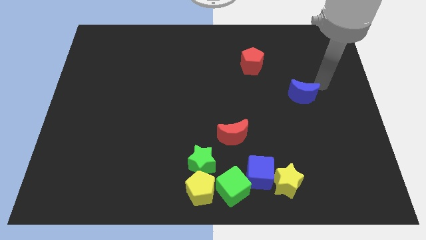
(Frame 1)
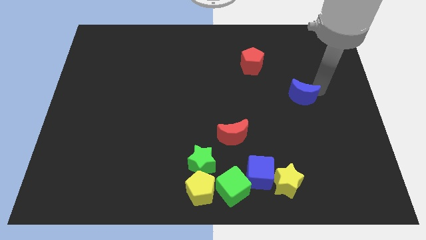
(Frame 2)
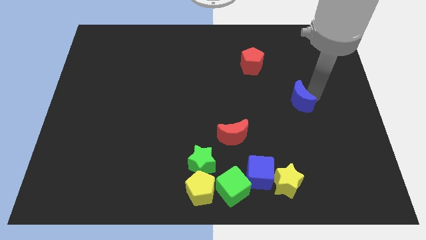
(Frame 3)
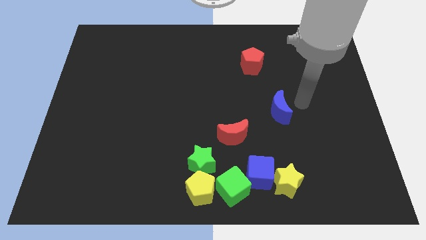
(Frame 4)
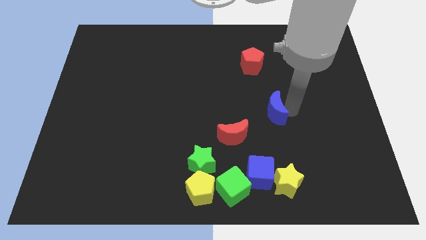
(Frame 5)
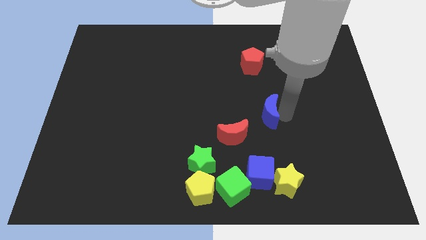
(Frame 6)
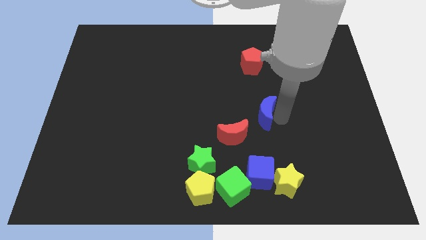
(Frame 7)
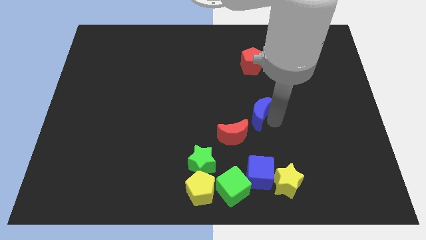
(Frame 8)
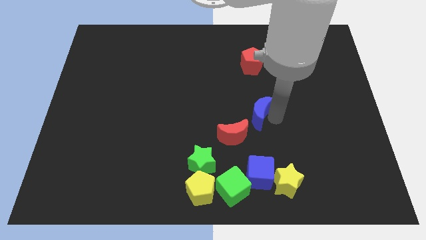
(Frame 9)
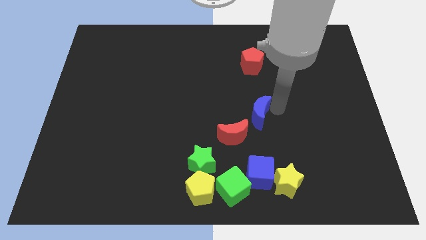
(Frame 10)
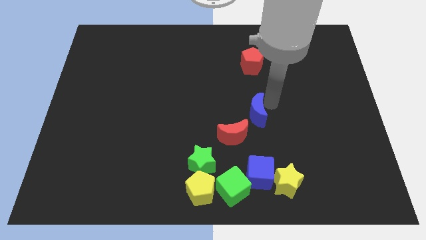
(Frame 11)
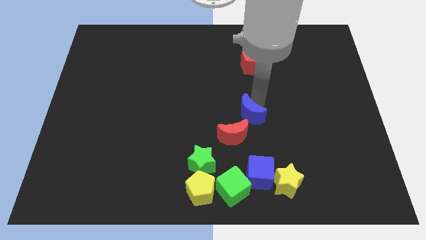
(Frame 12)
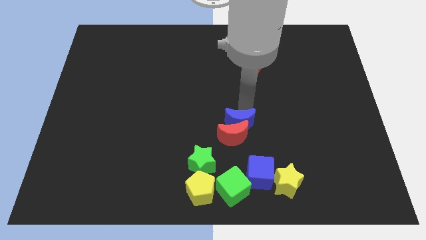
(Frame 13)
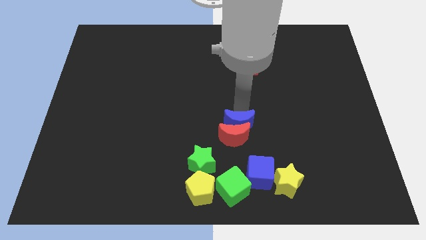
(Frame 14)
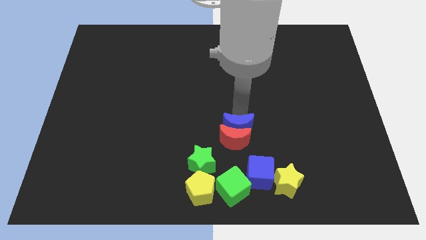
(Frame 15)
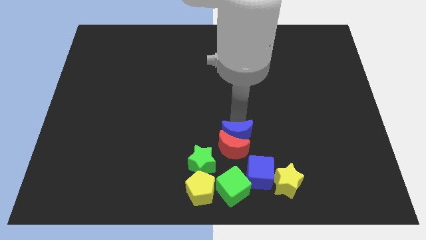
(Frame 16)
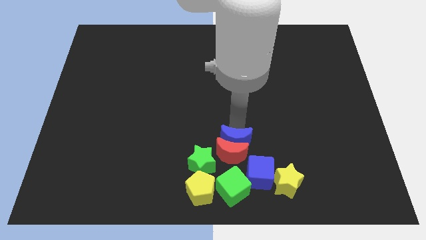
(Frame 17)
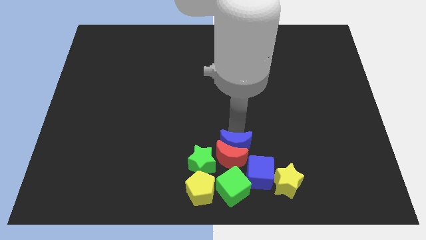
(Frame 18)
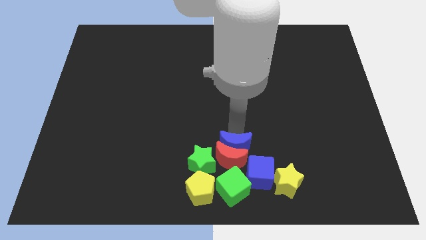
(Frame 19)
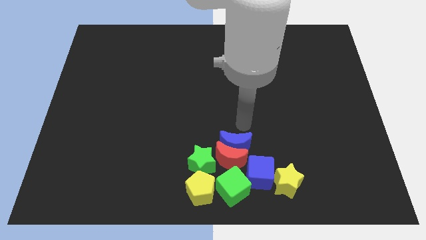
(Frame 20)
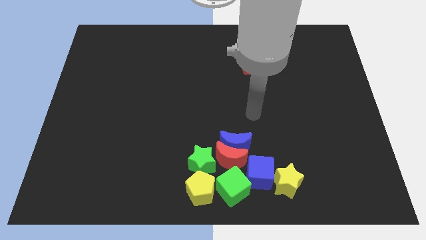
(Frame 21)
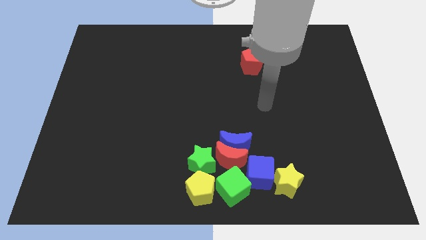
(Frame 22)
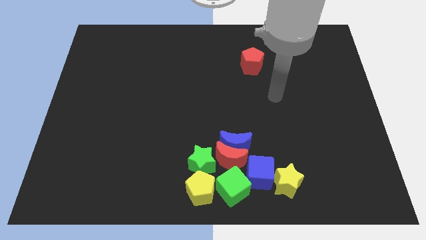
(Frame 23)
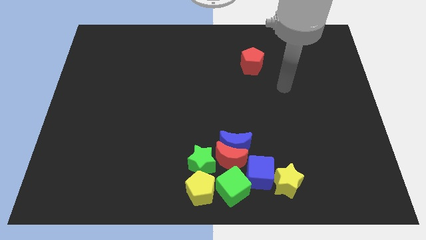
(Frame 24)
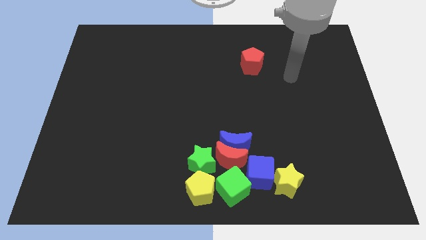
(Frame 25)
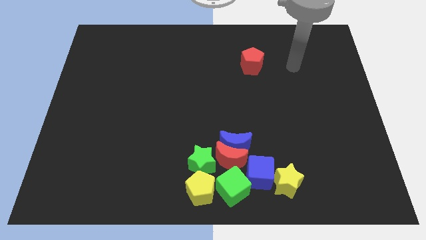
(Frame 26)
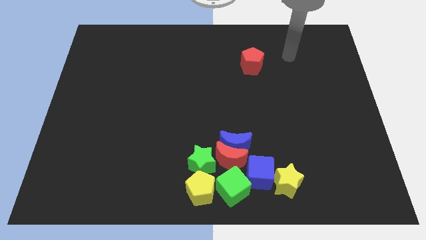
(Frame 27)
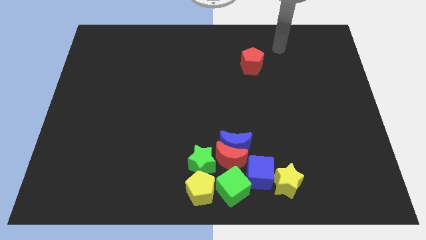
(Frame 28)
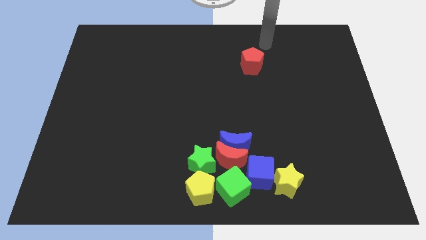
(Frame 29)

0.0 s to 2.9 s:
move blue moon into red moon

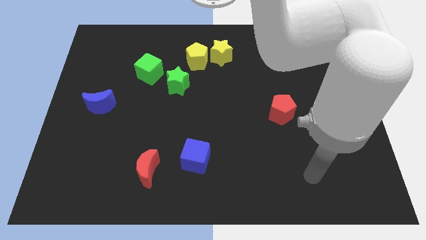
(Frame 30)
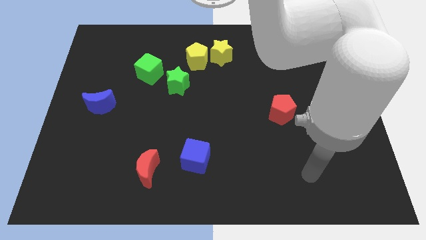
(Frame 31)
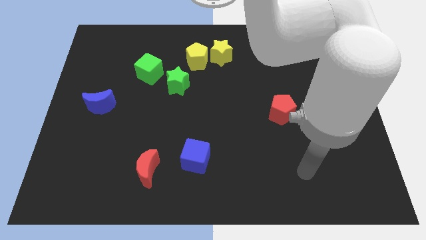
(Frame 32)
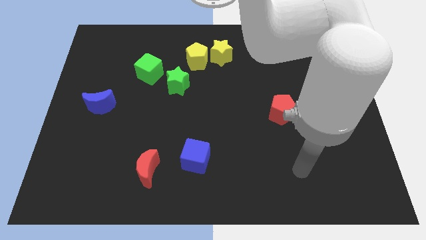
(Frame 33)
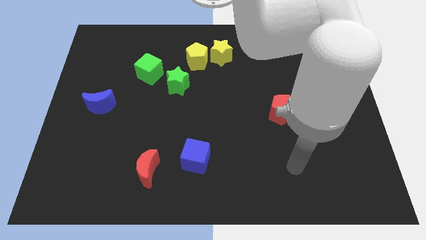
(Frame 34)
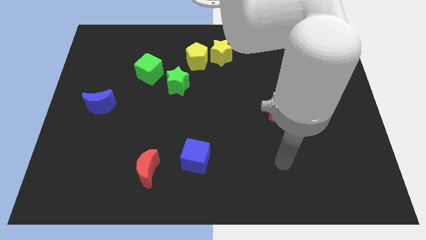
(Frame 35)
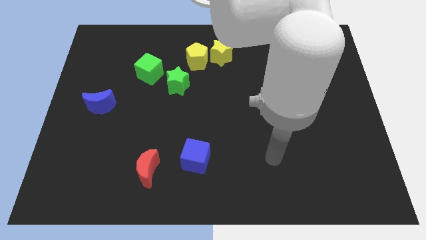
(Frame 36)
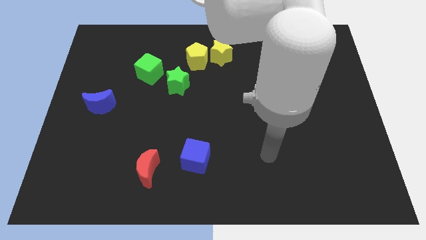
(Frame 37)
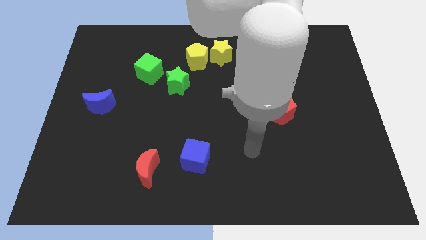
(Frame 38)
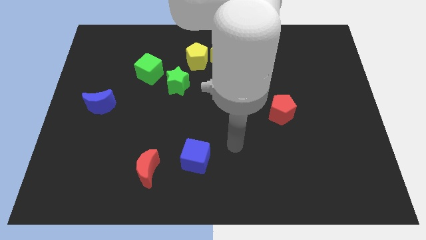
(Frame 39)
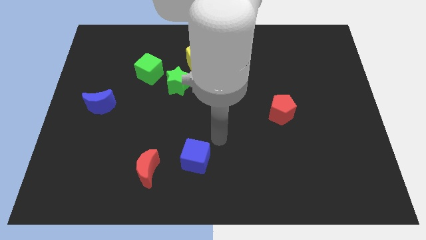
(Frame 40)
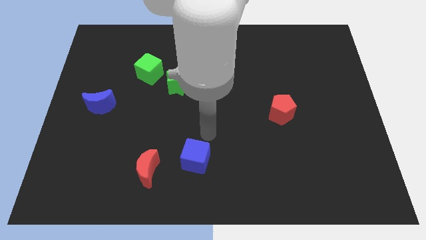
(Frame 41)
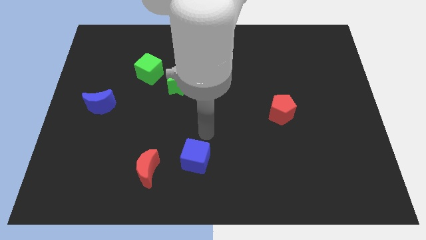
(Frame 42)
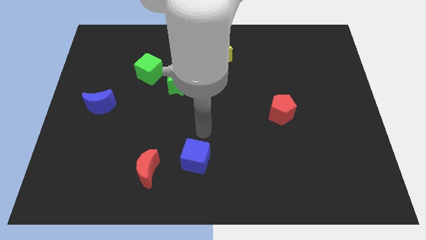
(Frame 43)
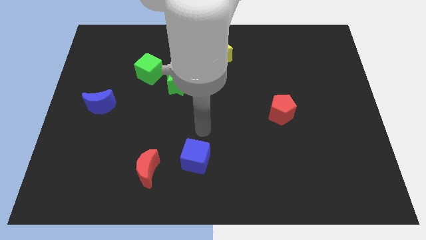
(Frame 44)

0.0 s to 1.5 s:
place your hand above the blue cube

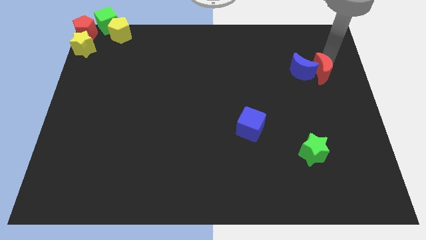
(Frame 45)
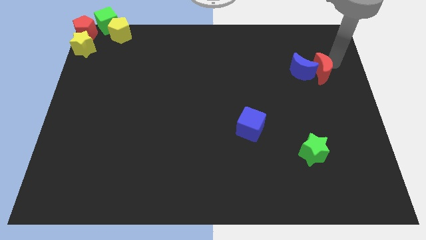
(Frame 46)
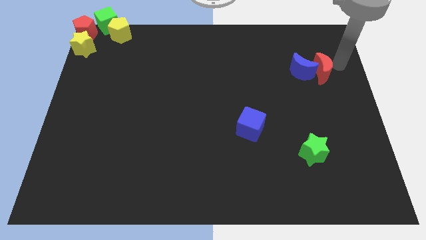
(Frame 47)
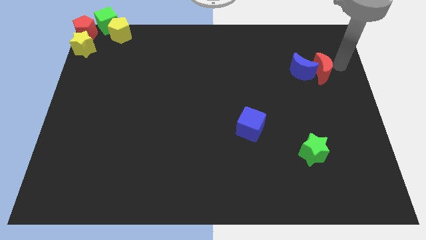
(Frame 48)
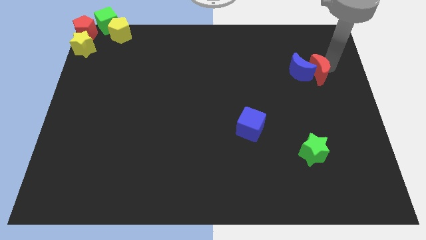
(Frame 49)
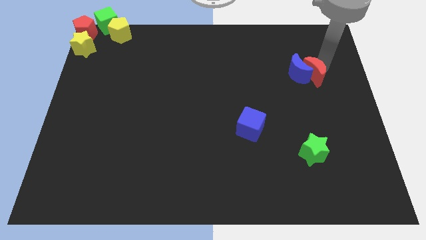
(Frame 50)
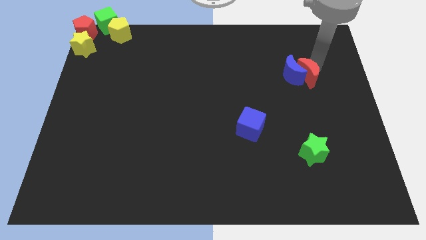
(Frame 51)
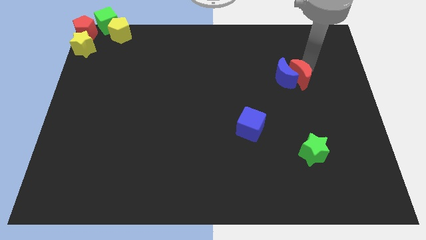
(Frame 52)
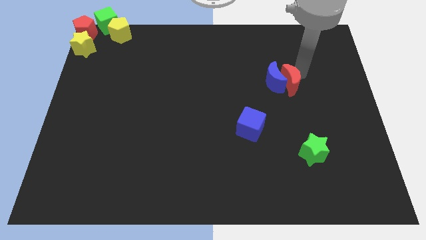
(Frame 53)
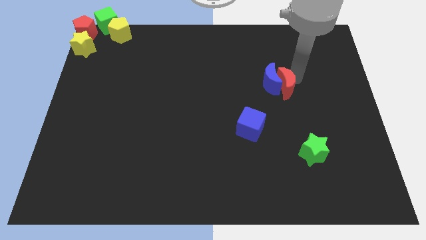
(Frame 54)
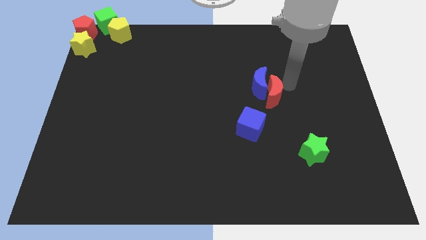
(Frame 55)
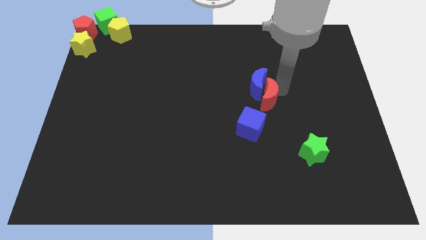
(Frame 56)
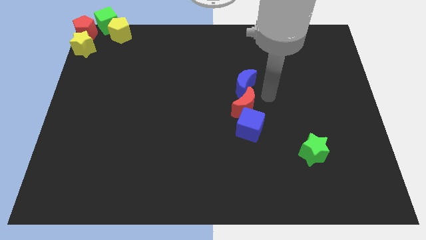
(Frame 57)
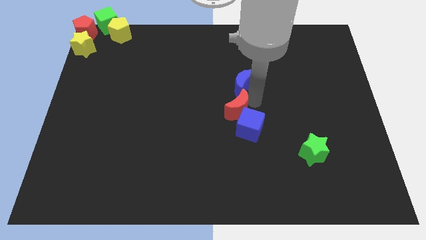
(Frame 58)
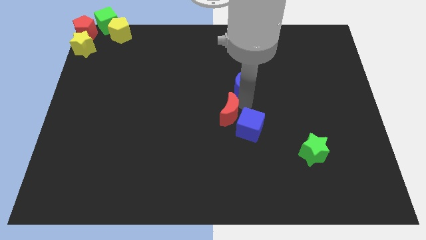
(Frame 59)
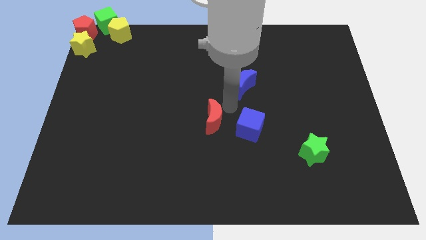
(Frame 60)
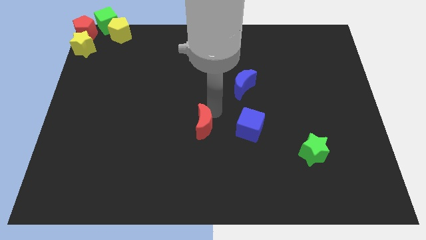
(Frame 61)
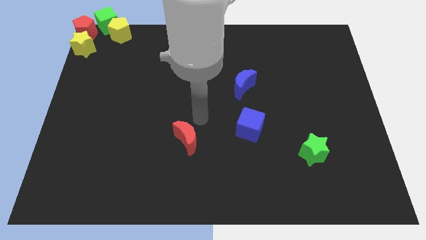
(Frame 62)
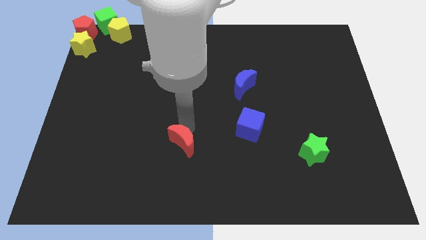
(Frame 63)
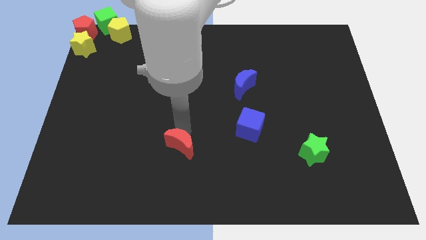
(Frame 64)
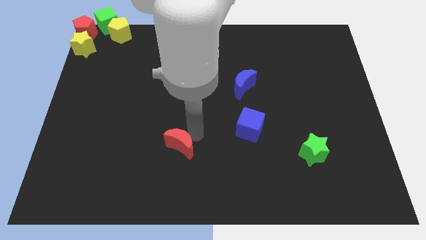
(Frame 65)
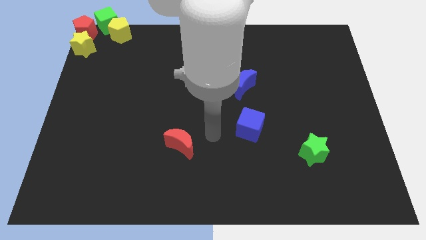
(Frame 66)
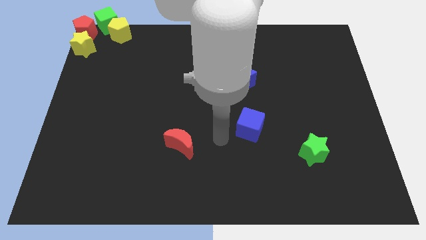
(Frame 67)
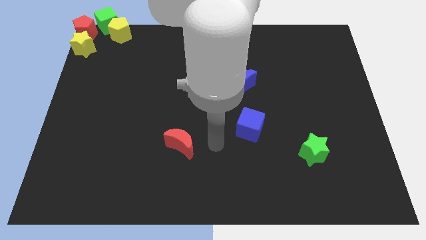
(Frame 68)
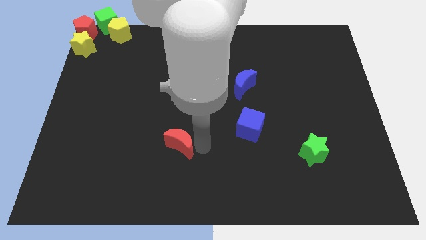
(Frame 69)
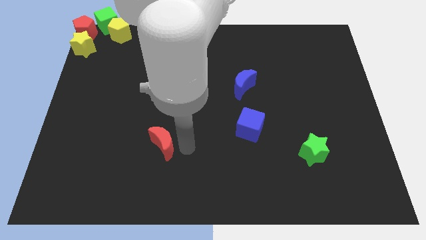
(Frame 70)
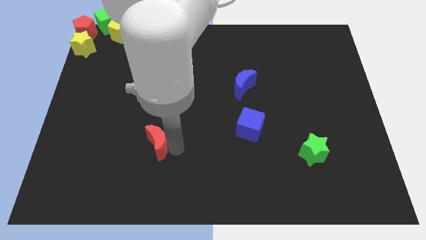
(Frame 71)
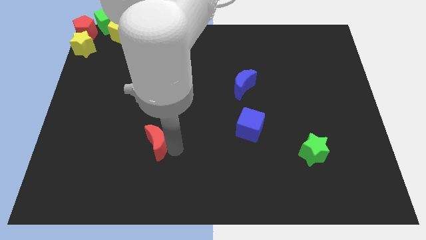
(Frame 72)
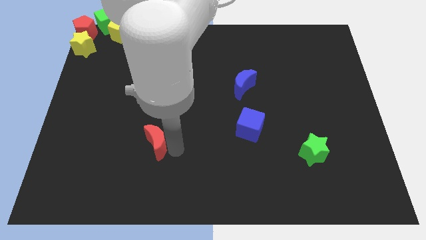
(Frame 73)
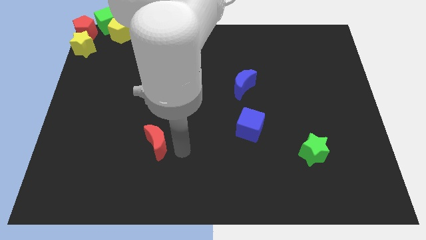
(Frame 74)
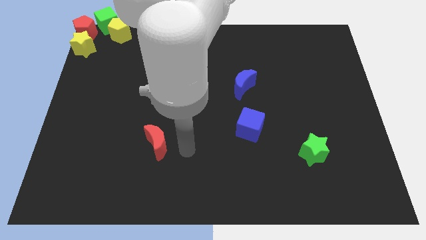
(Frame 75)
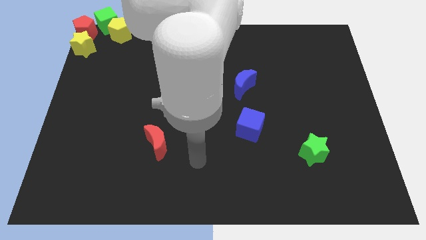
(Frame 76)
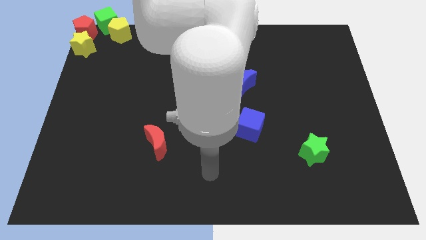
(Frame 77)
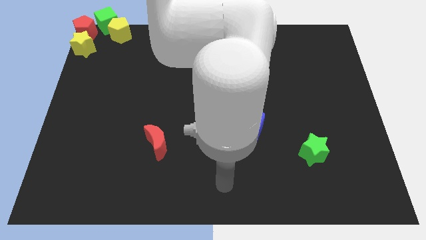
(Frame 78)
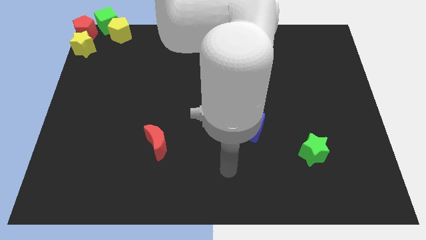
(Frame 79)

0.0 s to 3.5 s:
drag red moon towards bottom left of the board

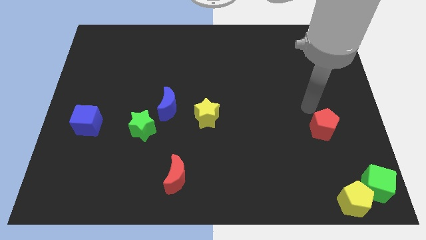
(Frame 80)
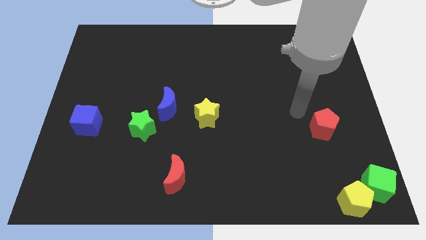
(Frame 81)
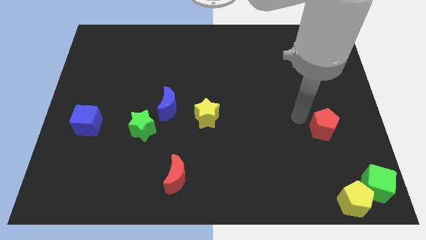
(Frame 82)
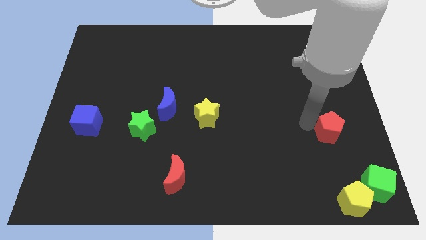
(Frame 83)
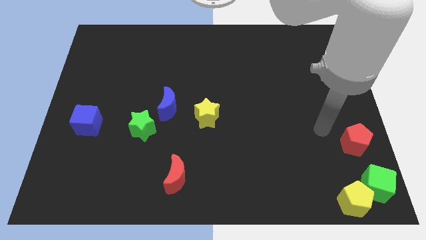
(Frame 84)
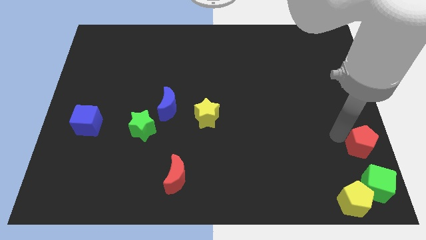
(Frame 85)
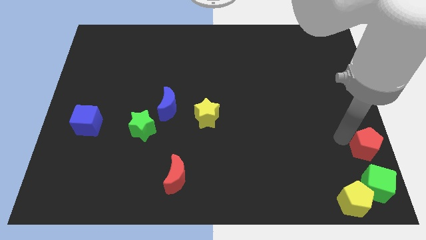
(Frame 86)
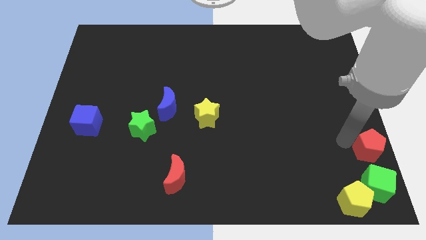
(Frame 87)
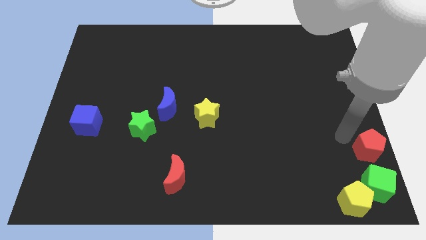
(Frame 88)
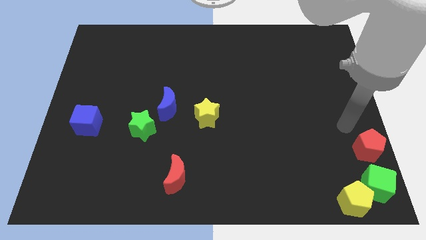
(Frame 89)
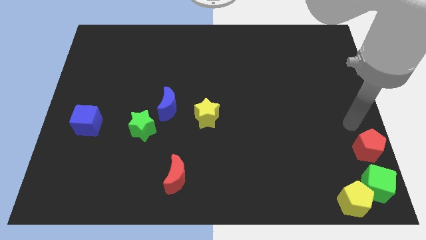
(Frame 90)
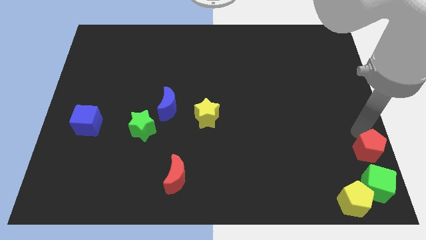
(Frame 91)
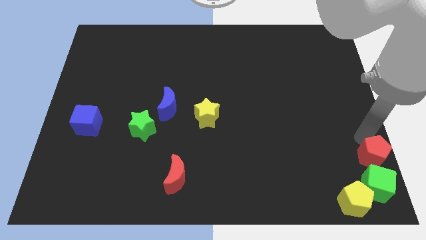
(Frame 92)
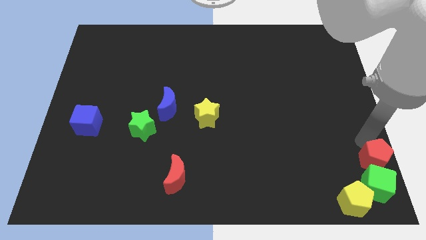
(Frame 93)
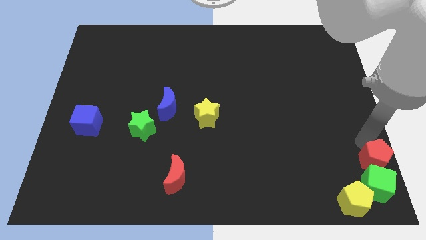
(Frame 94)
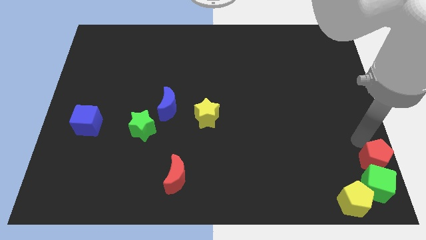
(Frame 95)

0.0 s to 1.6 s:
place yellow pentagon above the green cube
